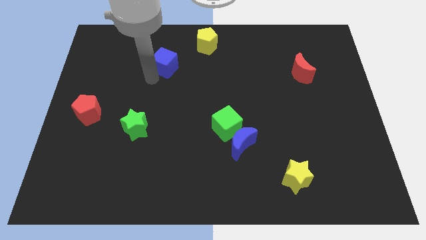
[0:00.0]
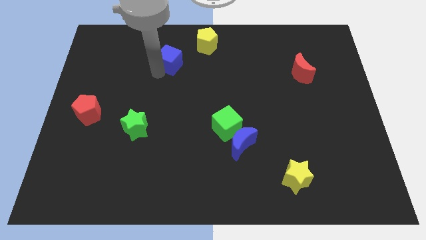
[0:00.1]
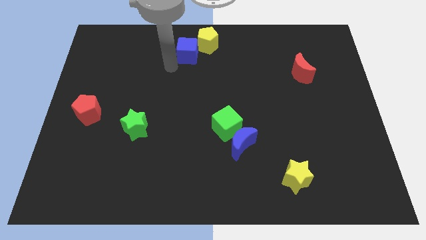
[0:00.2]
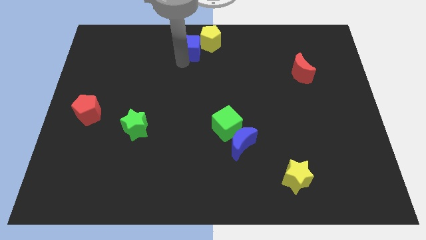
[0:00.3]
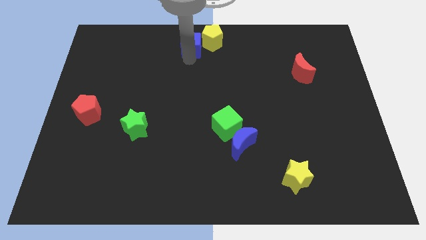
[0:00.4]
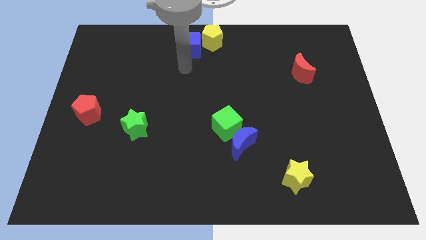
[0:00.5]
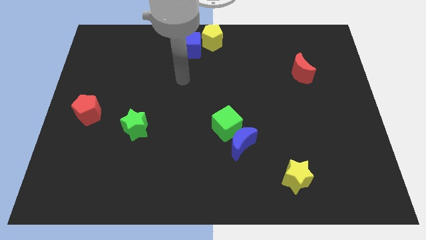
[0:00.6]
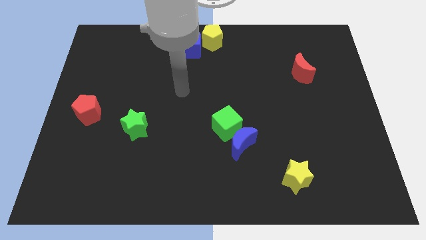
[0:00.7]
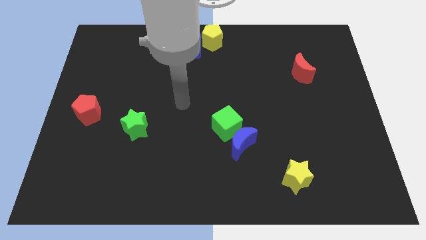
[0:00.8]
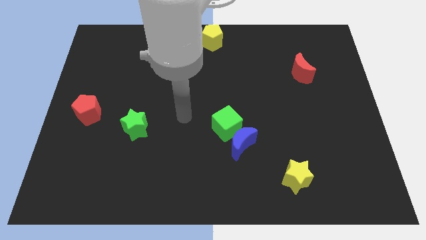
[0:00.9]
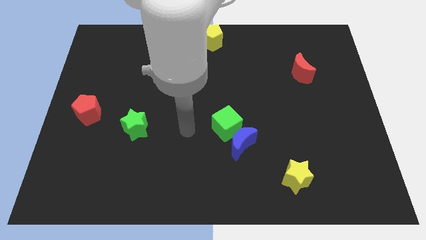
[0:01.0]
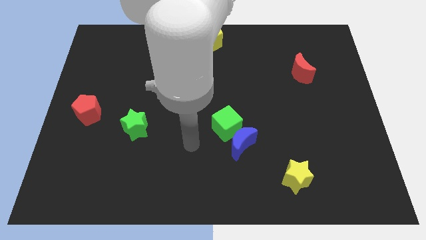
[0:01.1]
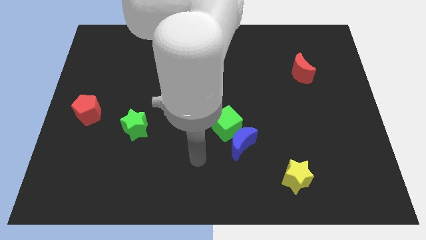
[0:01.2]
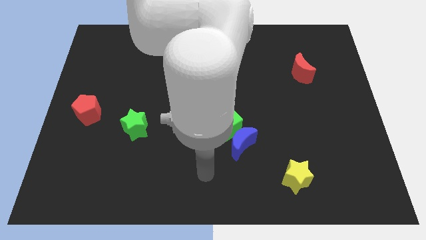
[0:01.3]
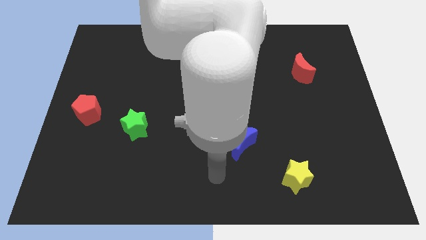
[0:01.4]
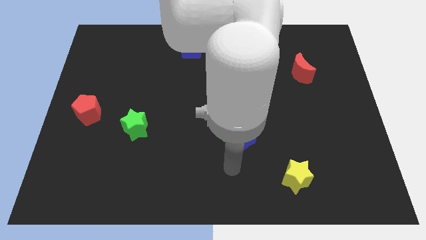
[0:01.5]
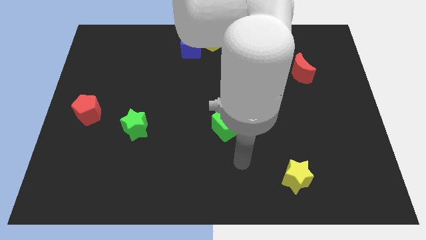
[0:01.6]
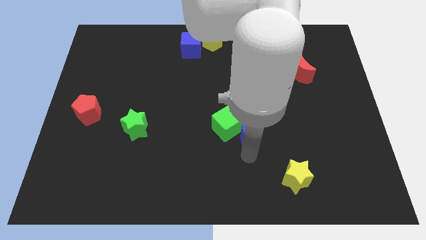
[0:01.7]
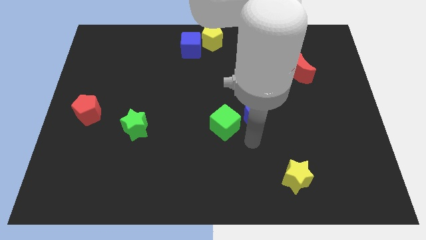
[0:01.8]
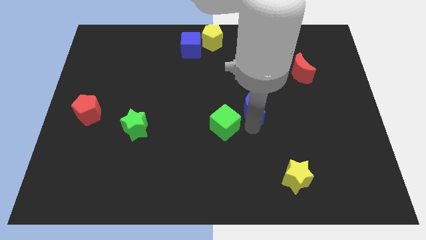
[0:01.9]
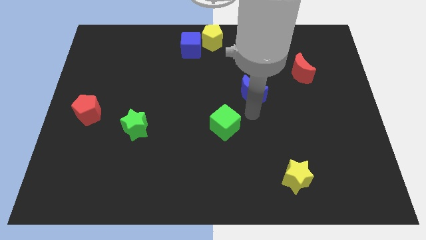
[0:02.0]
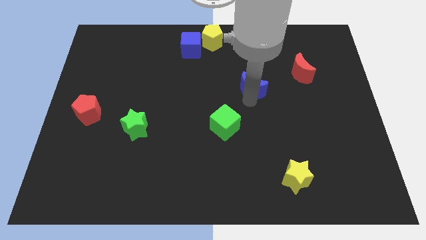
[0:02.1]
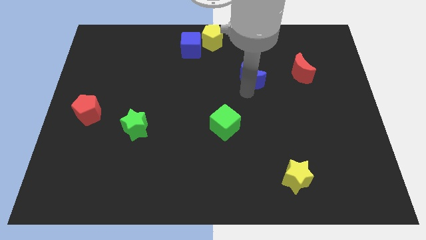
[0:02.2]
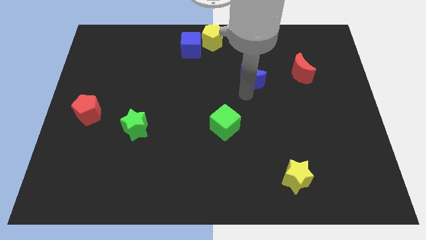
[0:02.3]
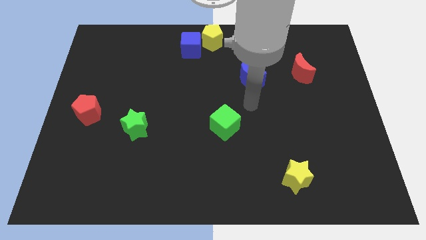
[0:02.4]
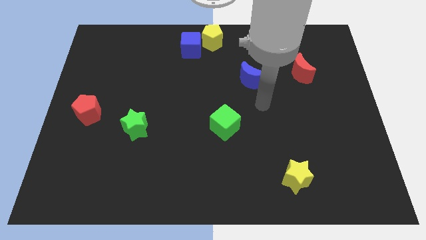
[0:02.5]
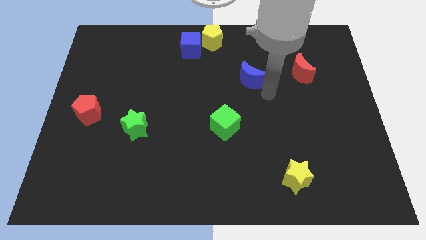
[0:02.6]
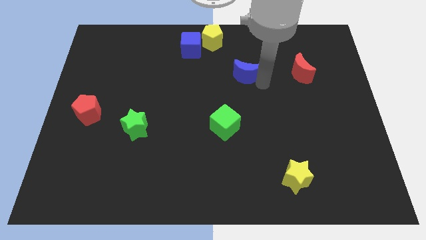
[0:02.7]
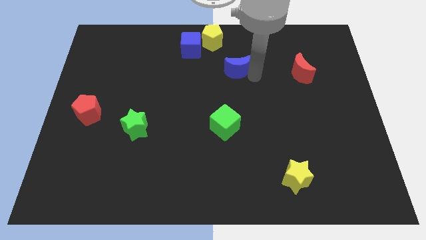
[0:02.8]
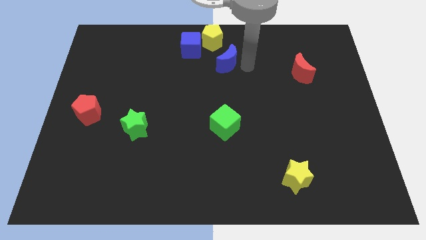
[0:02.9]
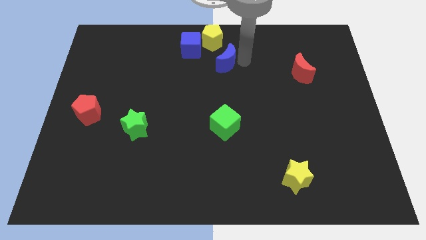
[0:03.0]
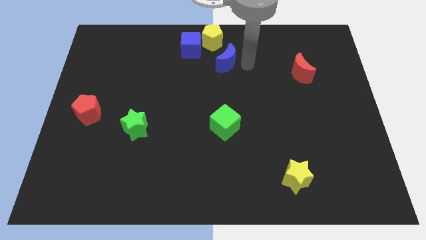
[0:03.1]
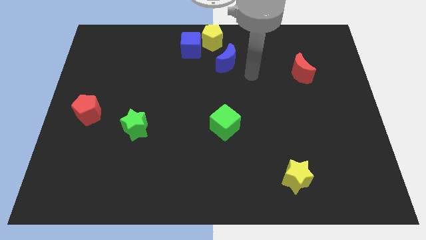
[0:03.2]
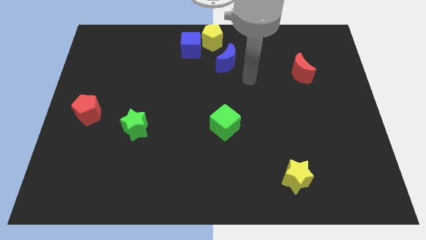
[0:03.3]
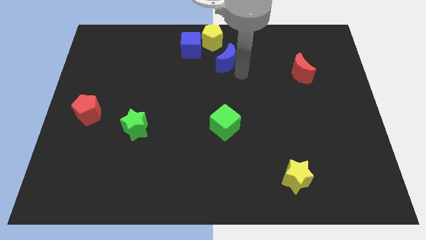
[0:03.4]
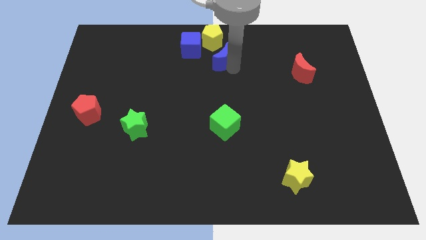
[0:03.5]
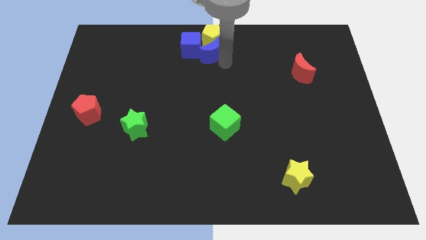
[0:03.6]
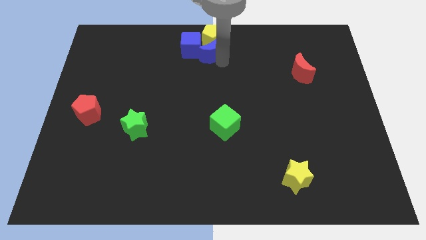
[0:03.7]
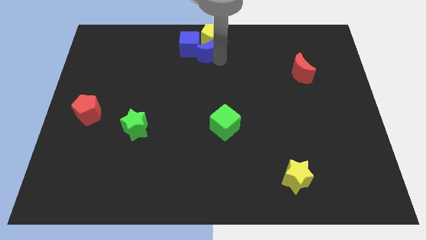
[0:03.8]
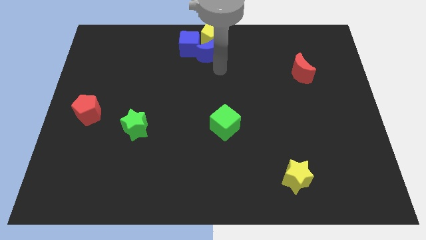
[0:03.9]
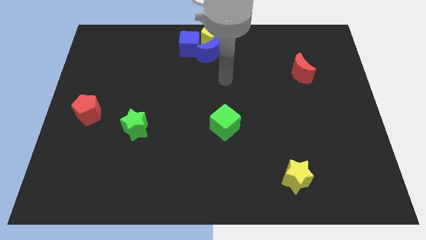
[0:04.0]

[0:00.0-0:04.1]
push both the blue blocks into the yellow pentagon

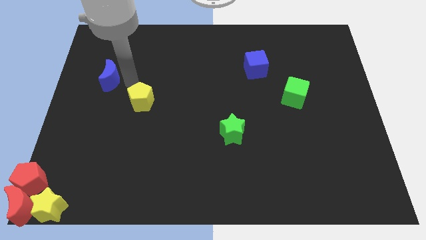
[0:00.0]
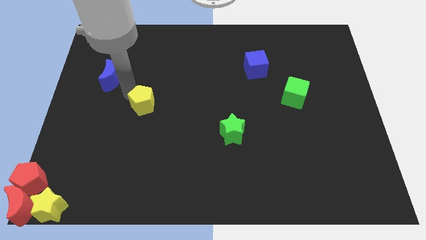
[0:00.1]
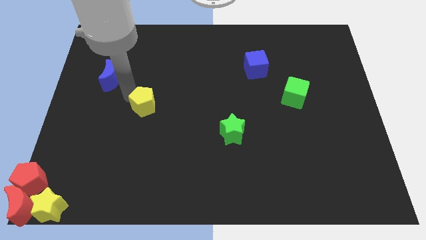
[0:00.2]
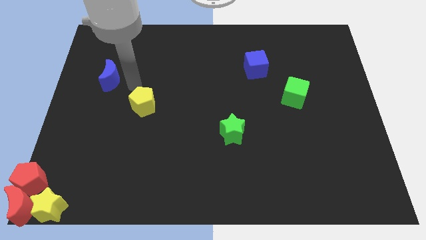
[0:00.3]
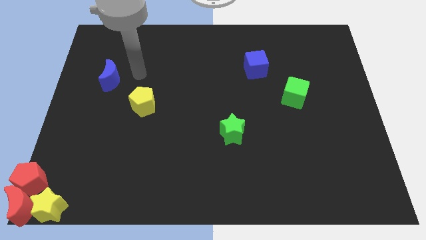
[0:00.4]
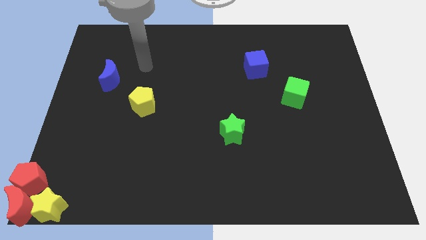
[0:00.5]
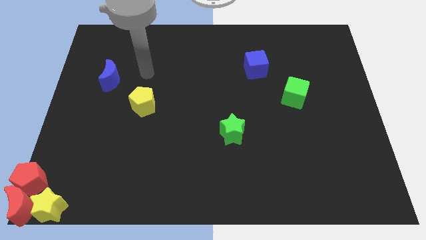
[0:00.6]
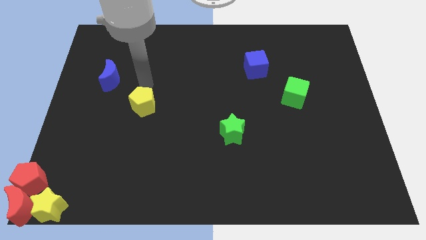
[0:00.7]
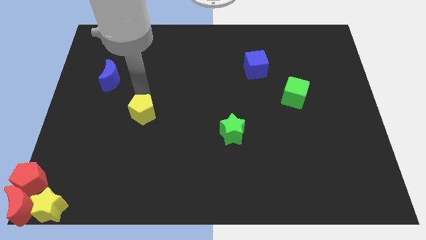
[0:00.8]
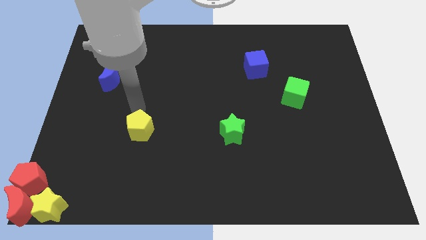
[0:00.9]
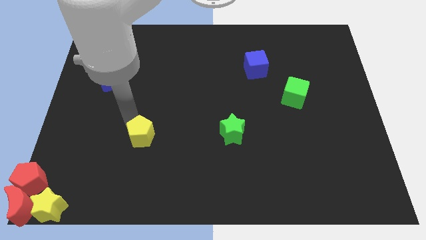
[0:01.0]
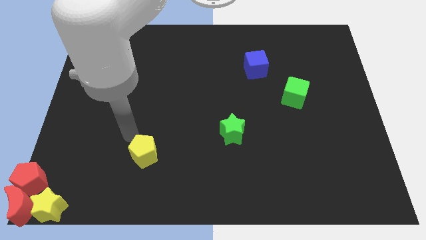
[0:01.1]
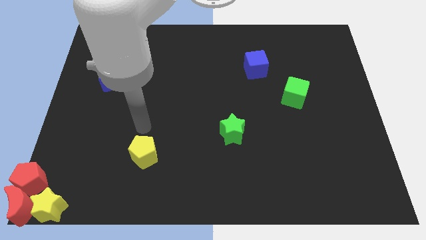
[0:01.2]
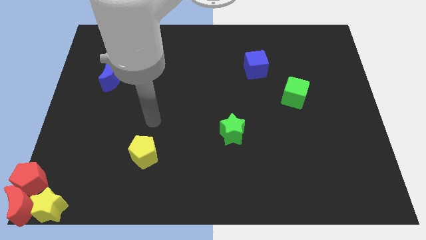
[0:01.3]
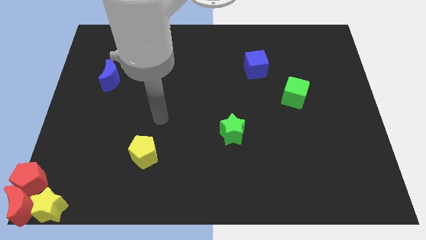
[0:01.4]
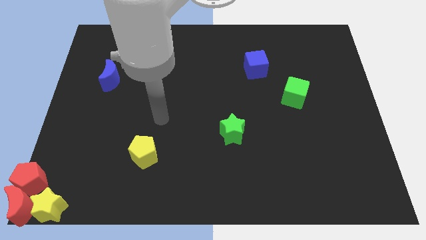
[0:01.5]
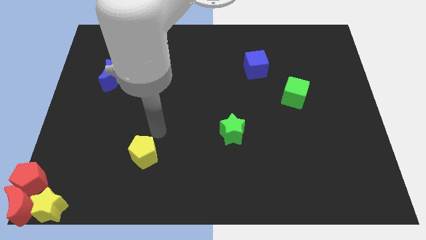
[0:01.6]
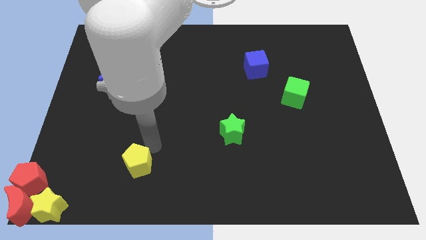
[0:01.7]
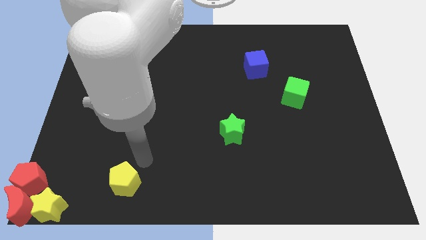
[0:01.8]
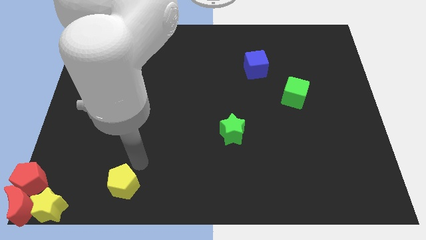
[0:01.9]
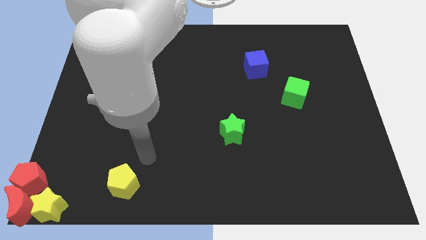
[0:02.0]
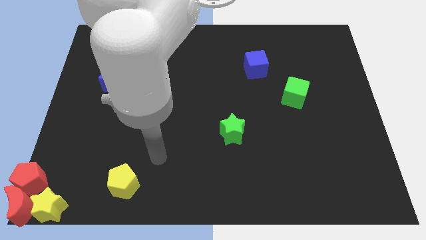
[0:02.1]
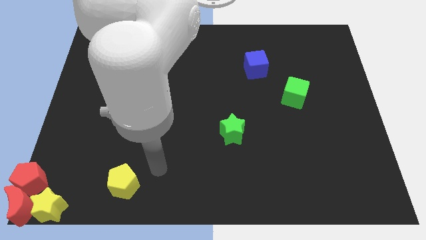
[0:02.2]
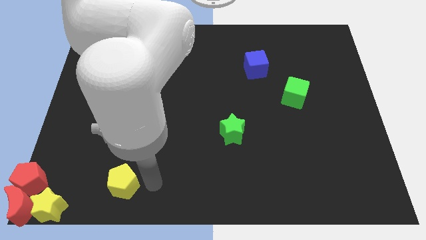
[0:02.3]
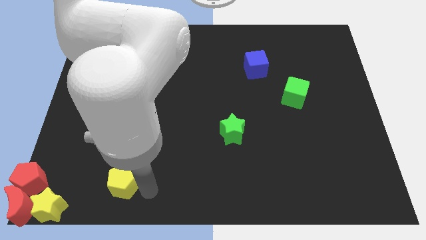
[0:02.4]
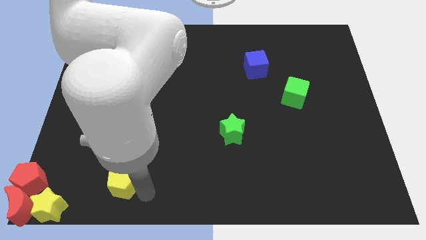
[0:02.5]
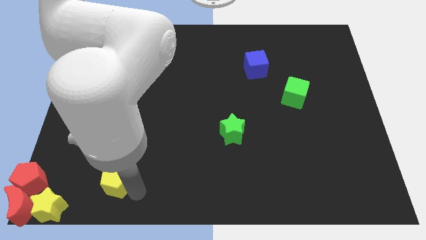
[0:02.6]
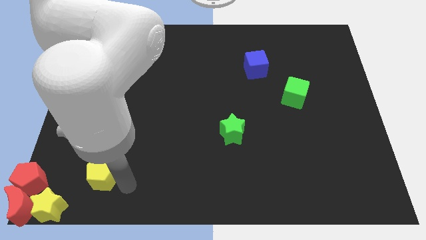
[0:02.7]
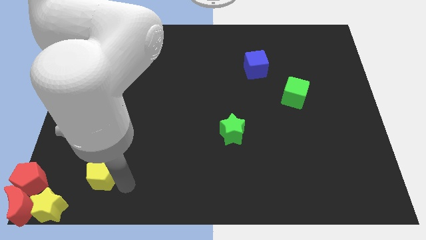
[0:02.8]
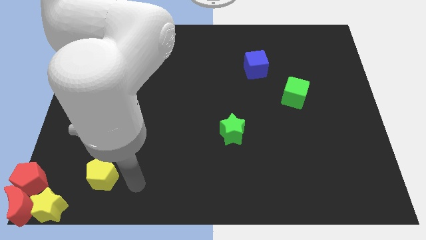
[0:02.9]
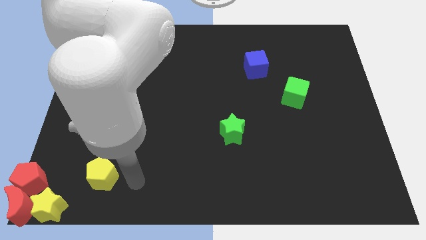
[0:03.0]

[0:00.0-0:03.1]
push yellow pentagon diagonal to yellow star

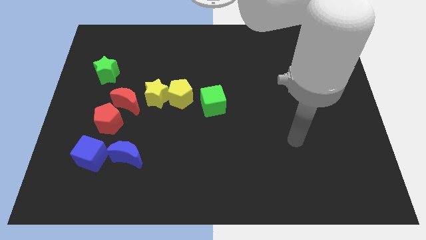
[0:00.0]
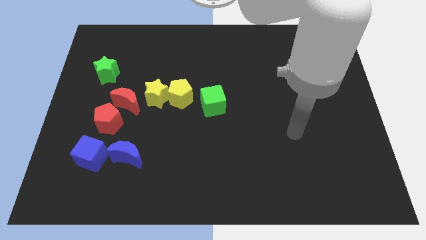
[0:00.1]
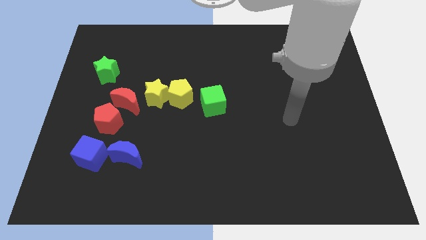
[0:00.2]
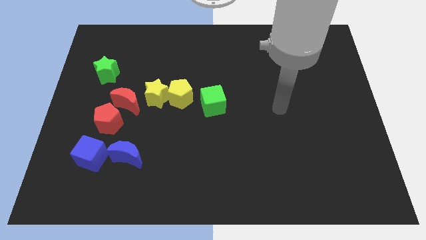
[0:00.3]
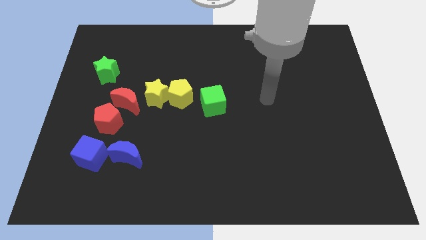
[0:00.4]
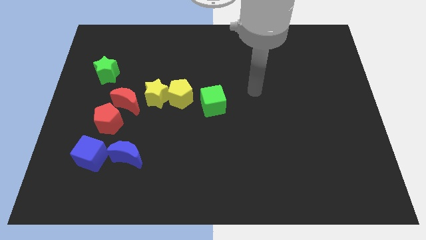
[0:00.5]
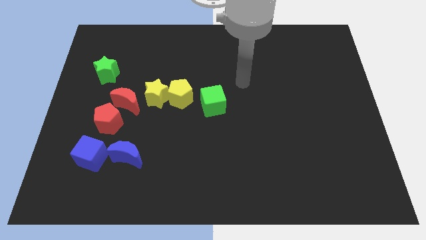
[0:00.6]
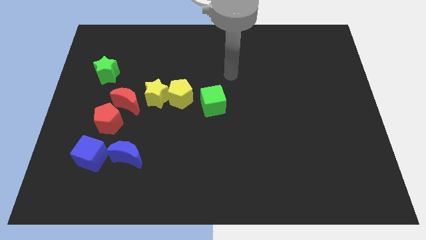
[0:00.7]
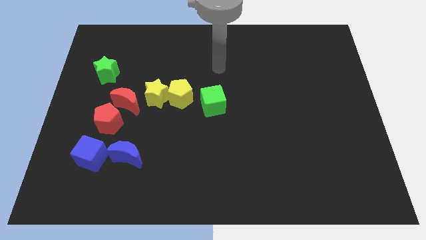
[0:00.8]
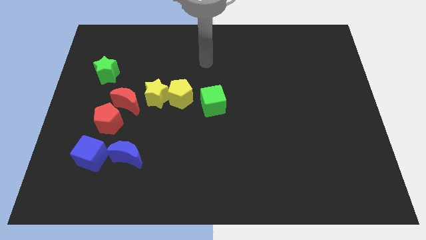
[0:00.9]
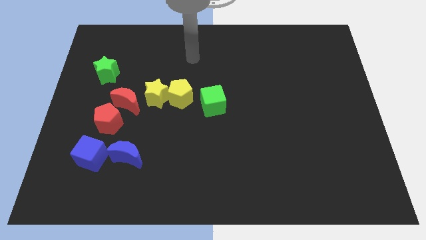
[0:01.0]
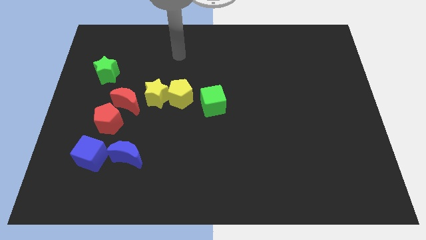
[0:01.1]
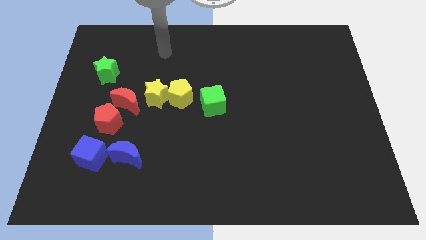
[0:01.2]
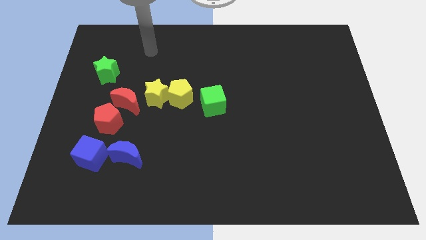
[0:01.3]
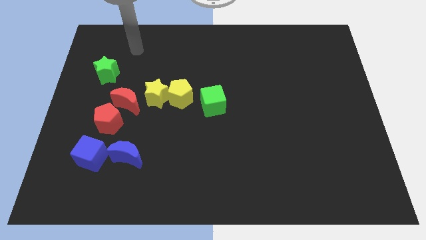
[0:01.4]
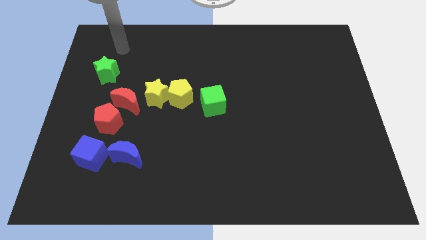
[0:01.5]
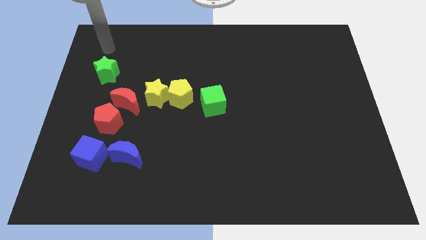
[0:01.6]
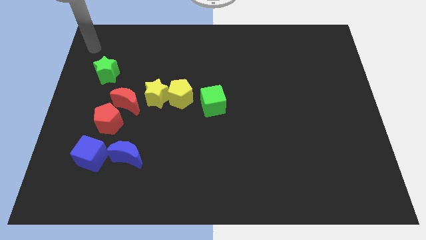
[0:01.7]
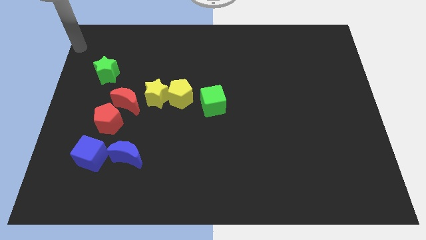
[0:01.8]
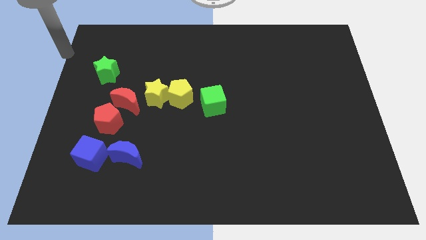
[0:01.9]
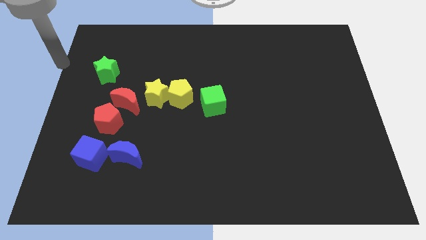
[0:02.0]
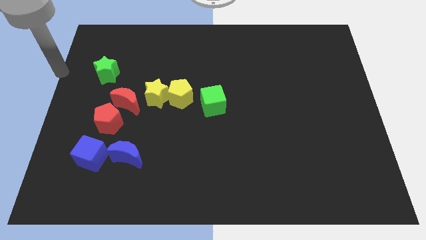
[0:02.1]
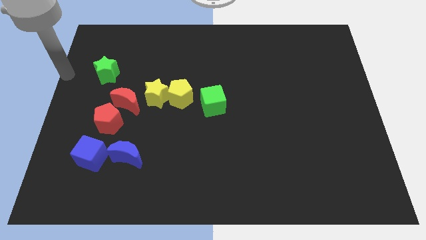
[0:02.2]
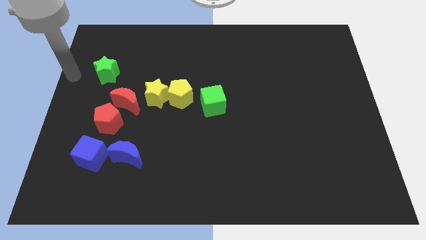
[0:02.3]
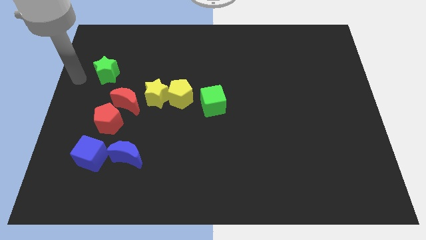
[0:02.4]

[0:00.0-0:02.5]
place your hand to the left of the green star
